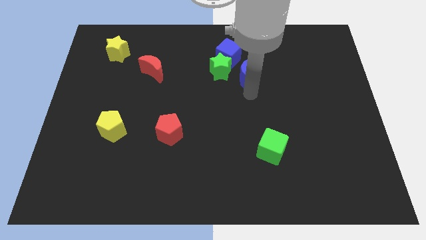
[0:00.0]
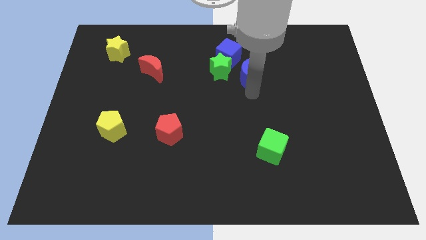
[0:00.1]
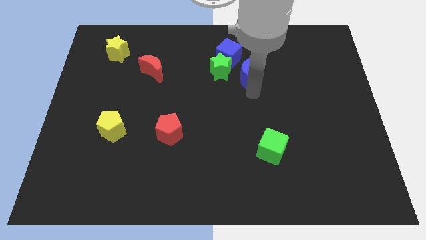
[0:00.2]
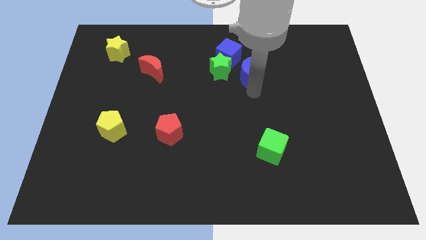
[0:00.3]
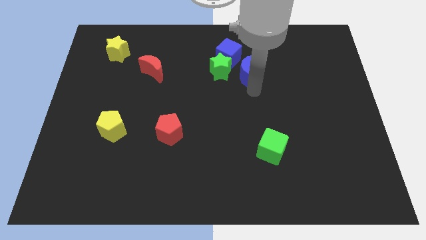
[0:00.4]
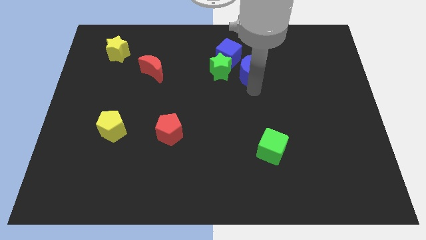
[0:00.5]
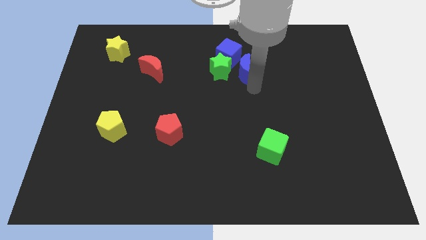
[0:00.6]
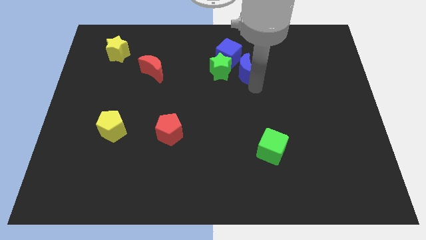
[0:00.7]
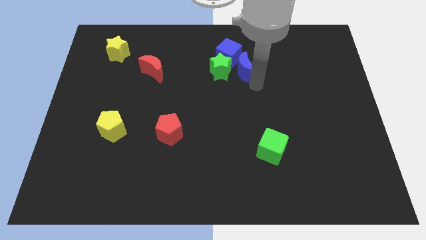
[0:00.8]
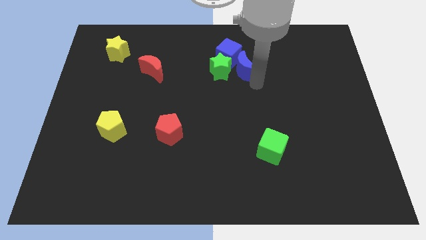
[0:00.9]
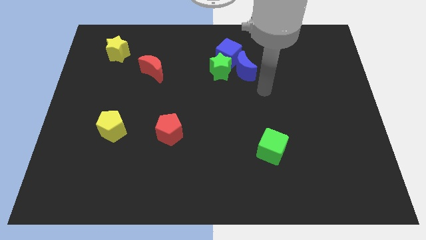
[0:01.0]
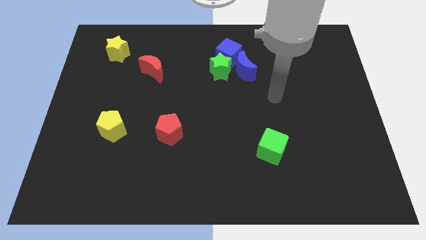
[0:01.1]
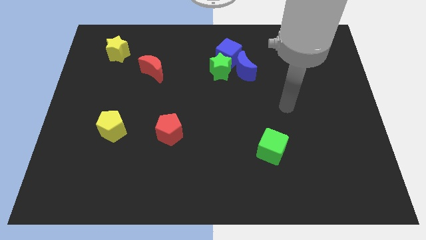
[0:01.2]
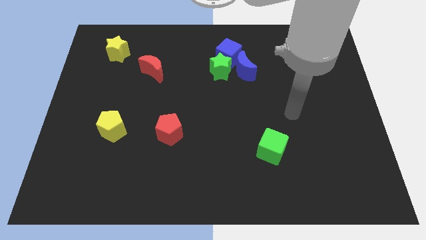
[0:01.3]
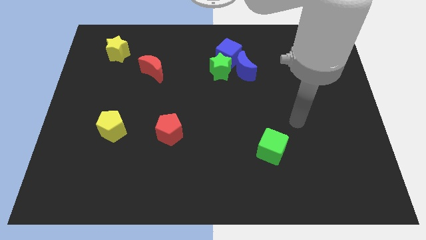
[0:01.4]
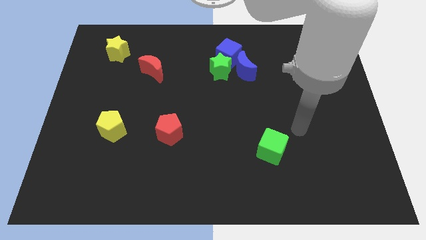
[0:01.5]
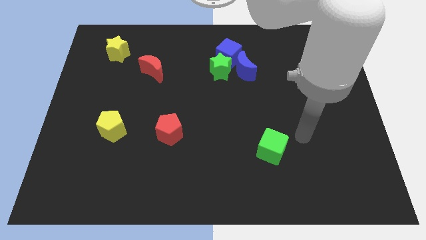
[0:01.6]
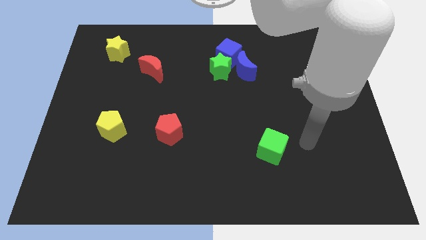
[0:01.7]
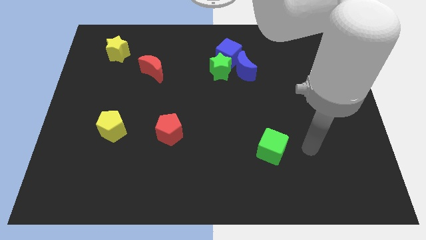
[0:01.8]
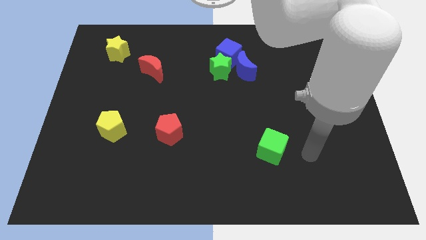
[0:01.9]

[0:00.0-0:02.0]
move your arm to the right side of the green cube

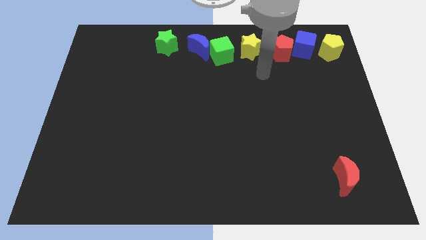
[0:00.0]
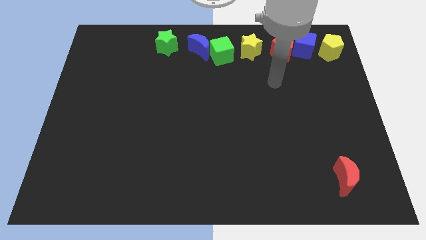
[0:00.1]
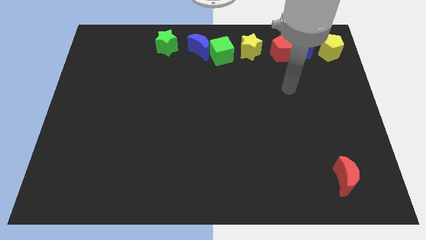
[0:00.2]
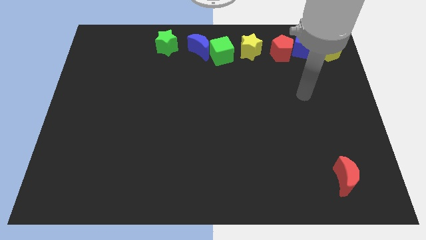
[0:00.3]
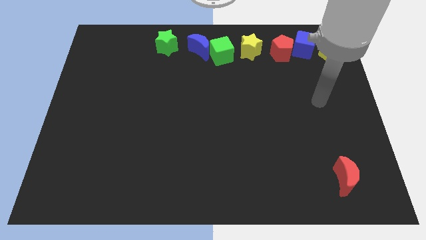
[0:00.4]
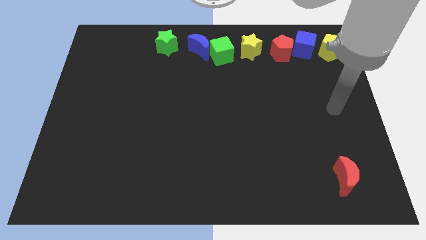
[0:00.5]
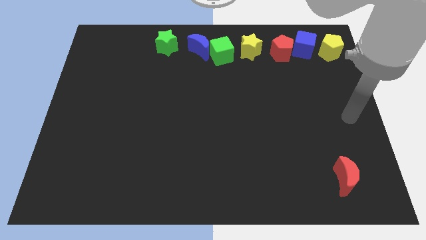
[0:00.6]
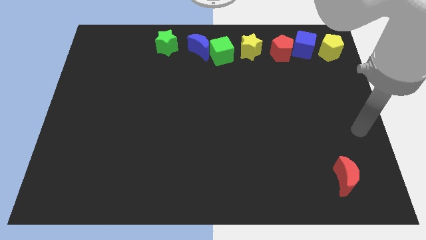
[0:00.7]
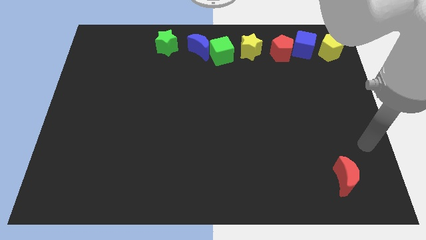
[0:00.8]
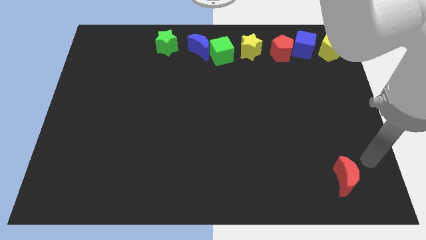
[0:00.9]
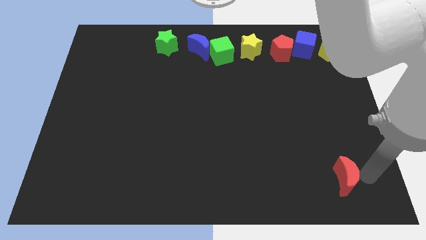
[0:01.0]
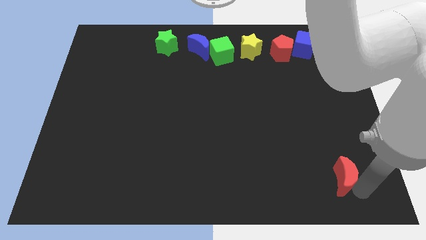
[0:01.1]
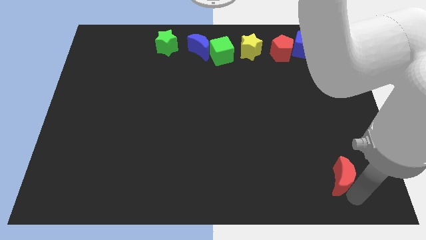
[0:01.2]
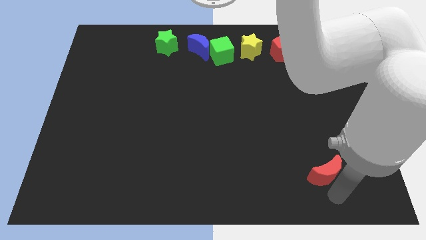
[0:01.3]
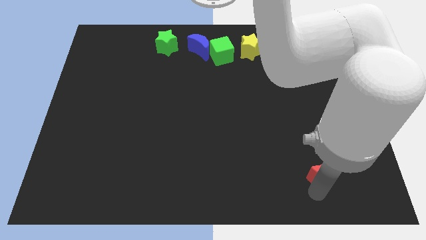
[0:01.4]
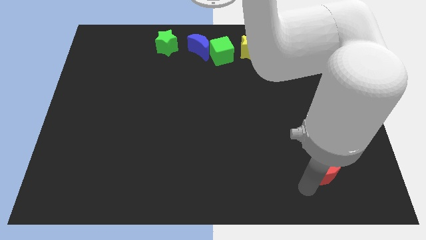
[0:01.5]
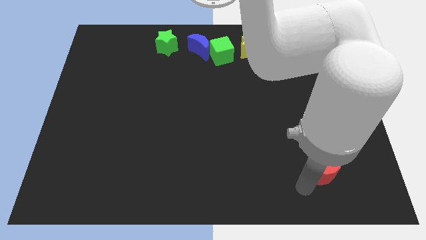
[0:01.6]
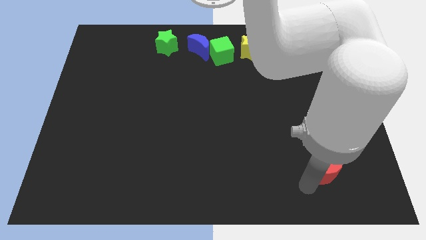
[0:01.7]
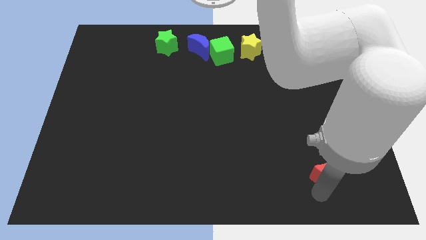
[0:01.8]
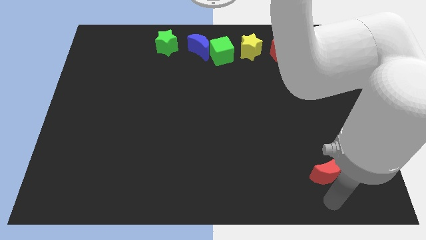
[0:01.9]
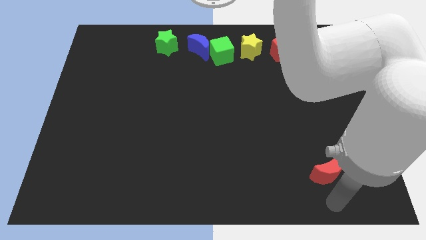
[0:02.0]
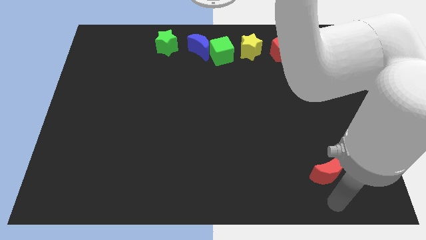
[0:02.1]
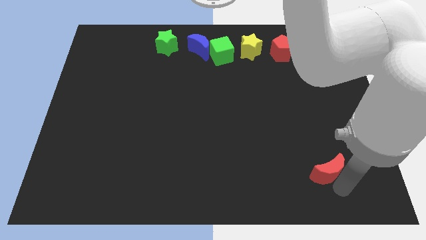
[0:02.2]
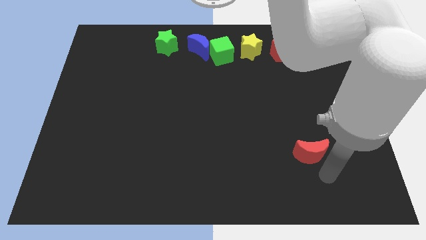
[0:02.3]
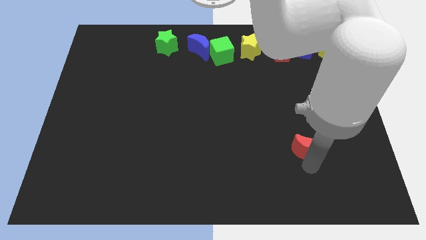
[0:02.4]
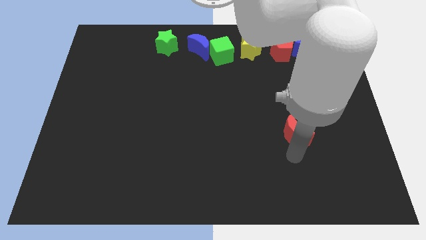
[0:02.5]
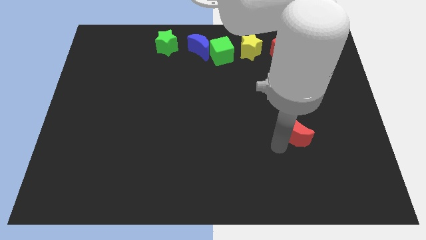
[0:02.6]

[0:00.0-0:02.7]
push the red crescent to the top of the board

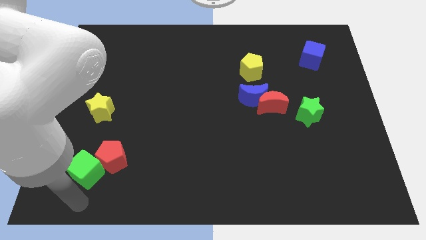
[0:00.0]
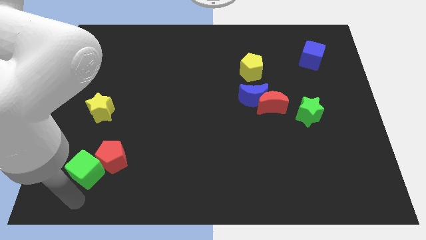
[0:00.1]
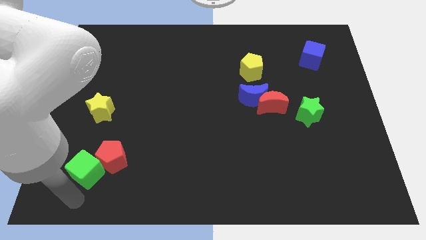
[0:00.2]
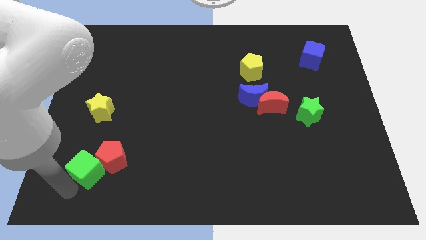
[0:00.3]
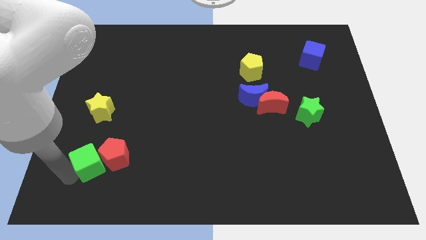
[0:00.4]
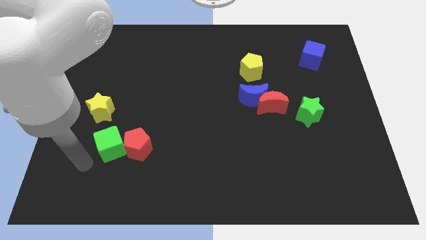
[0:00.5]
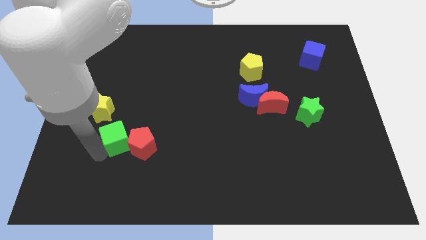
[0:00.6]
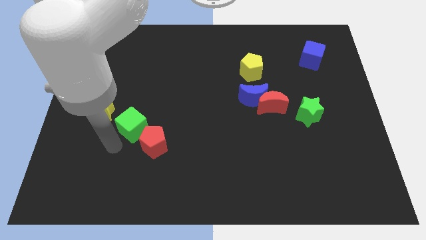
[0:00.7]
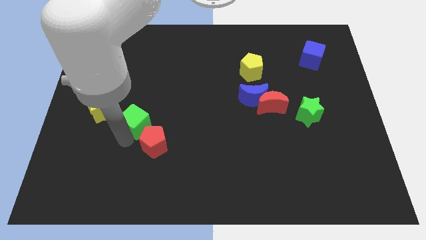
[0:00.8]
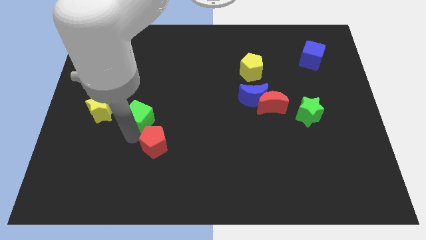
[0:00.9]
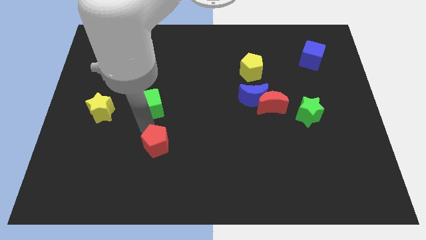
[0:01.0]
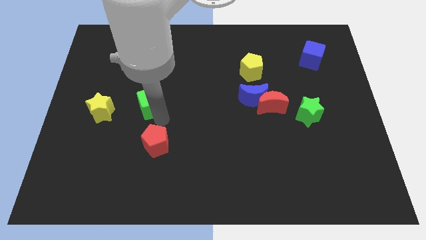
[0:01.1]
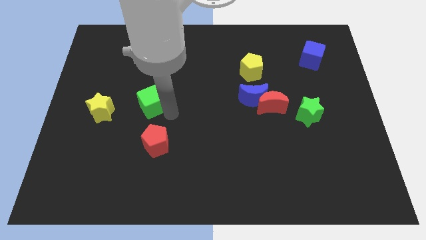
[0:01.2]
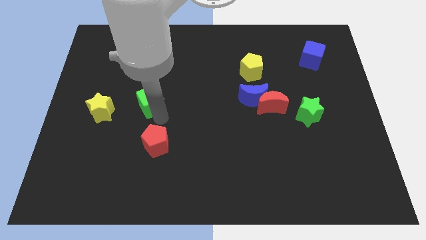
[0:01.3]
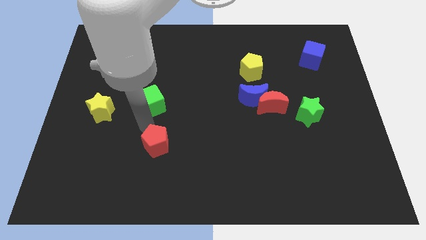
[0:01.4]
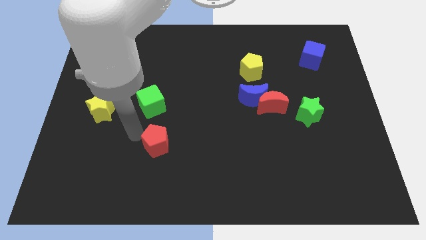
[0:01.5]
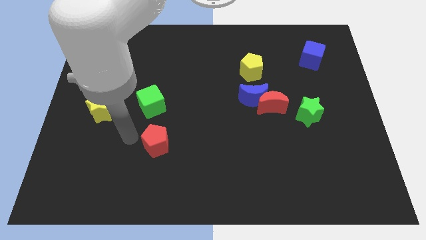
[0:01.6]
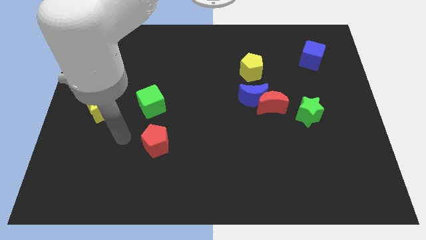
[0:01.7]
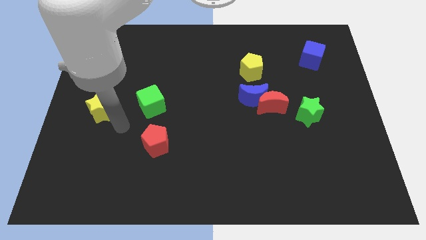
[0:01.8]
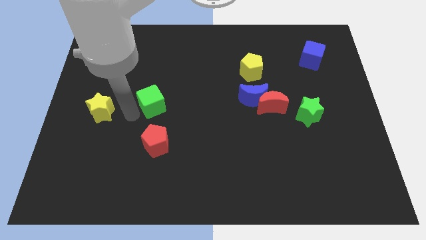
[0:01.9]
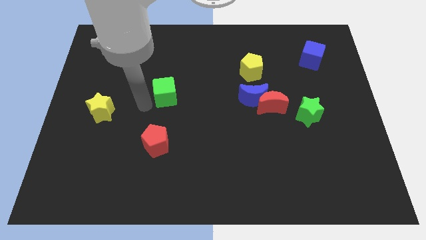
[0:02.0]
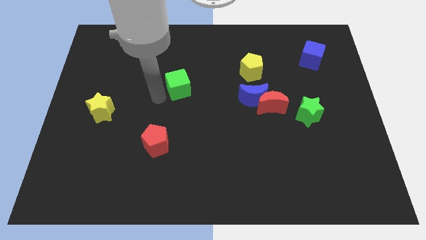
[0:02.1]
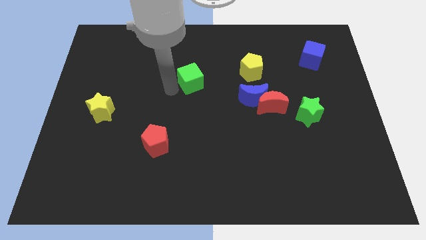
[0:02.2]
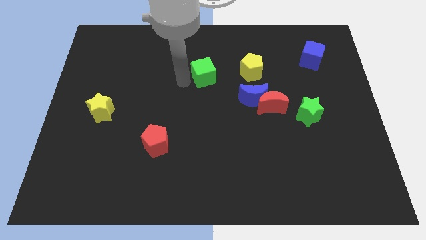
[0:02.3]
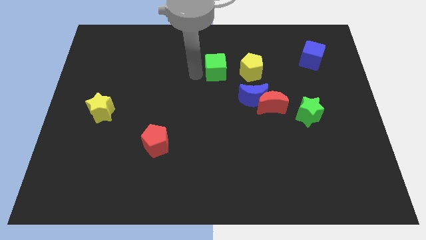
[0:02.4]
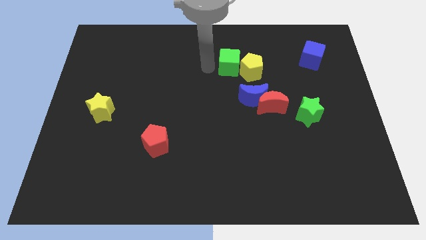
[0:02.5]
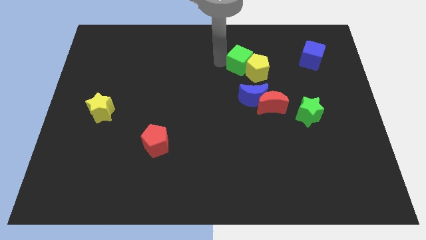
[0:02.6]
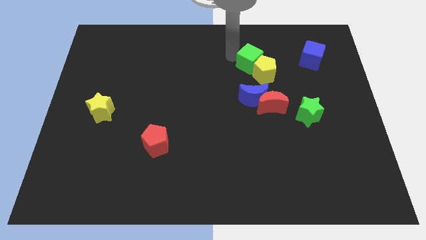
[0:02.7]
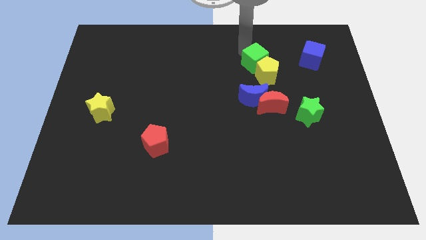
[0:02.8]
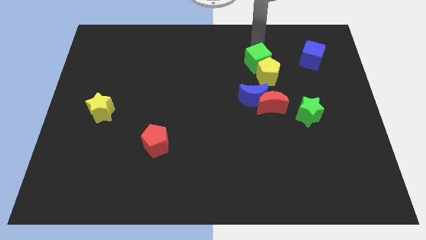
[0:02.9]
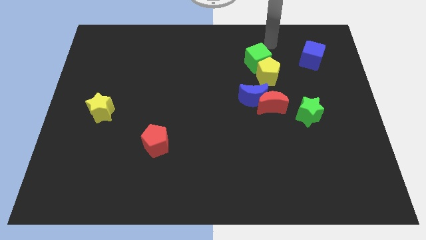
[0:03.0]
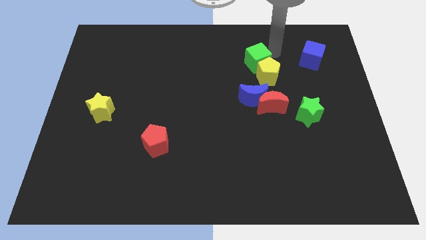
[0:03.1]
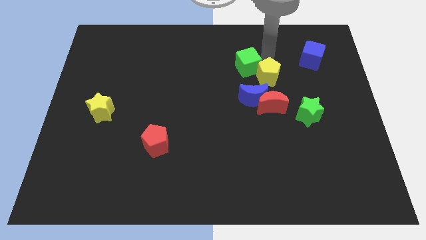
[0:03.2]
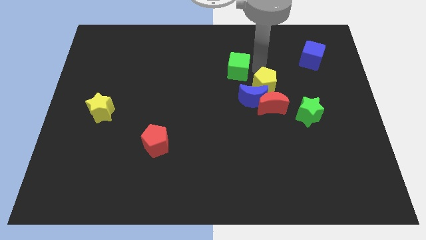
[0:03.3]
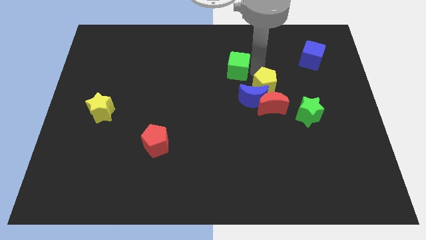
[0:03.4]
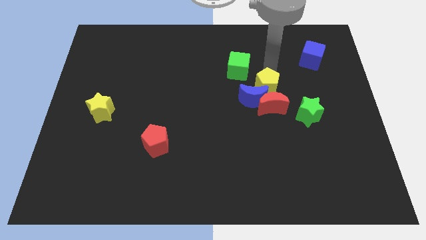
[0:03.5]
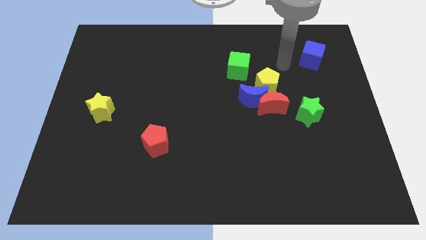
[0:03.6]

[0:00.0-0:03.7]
place green cube to the top left of the blue moon

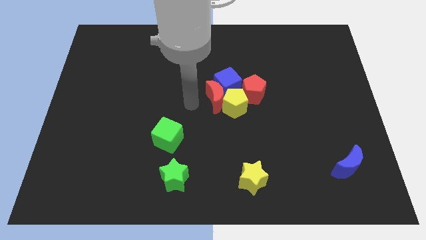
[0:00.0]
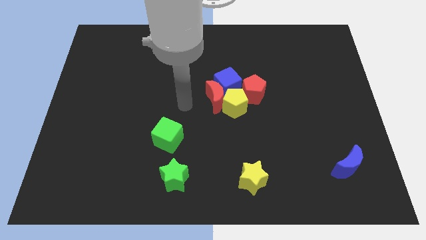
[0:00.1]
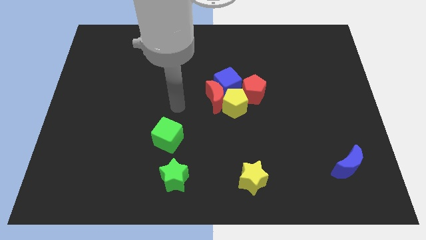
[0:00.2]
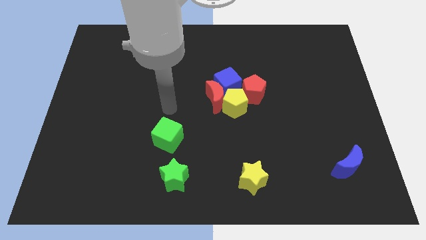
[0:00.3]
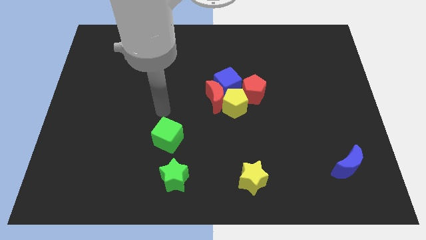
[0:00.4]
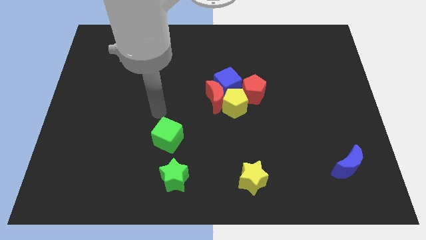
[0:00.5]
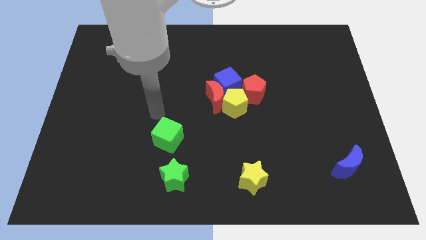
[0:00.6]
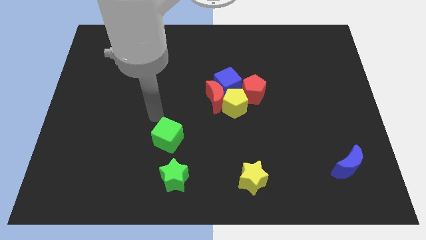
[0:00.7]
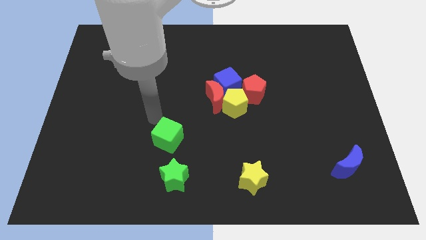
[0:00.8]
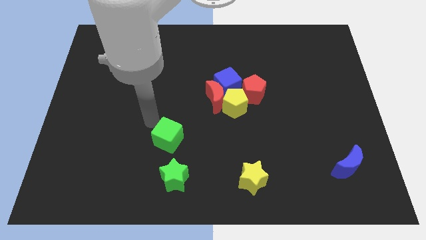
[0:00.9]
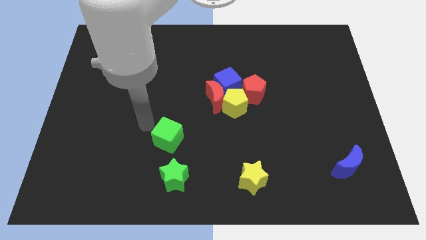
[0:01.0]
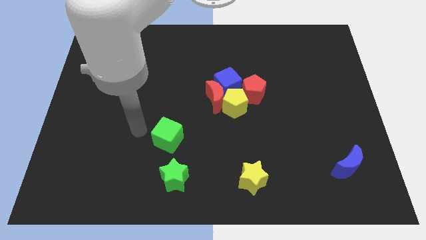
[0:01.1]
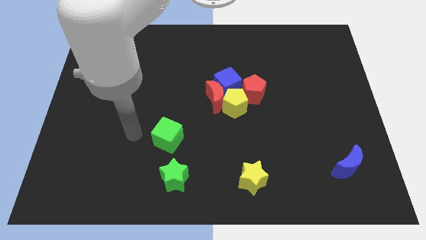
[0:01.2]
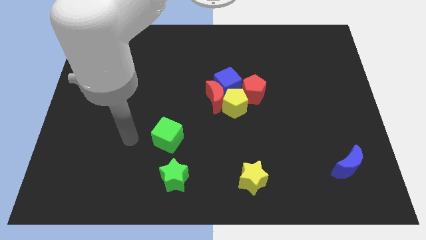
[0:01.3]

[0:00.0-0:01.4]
move your arm away from the red crescent
